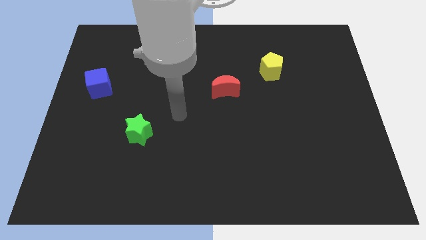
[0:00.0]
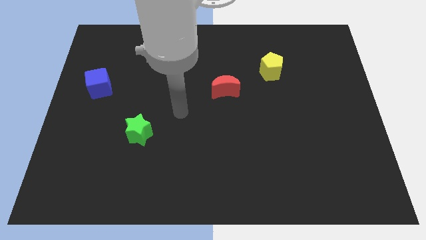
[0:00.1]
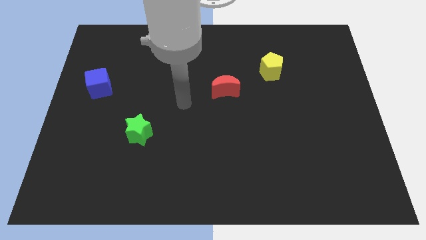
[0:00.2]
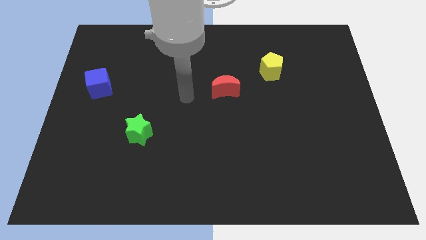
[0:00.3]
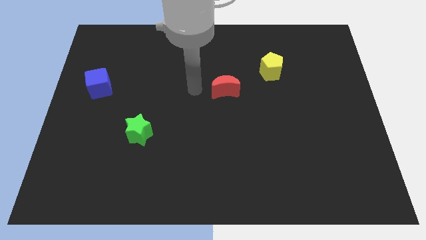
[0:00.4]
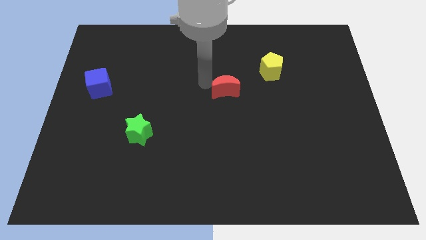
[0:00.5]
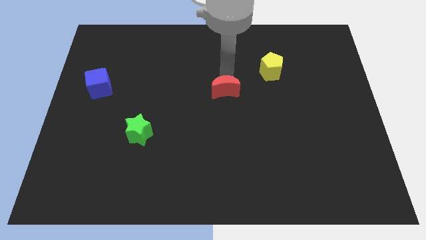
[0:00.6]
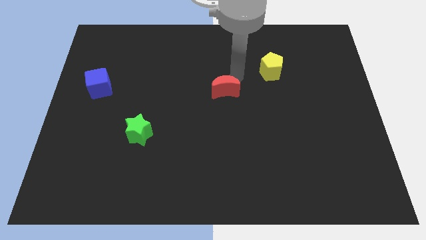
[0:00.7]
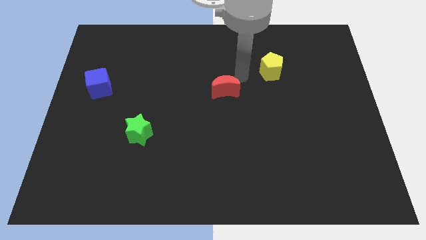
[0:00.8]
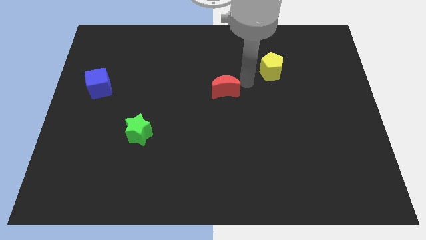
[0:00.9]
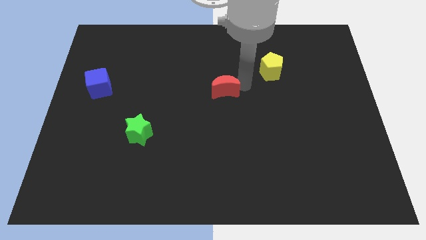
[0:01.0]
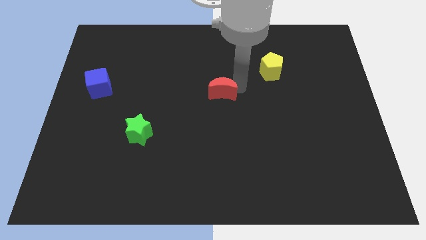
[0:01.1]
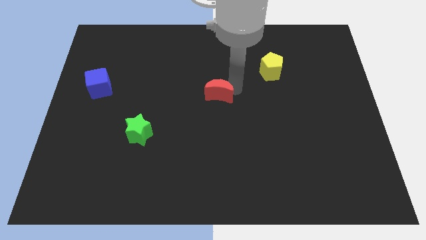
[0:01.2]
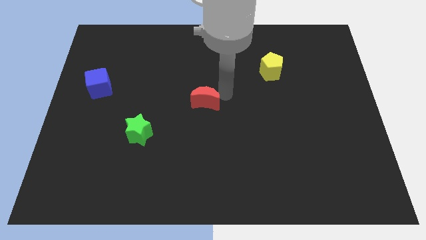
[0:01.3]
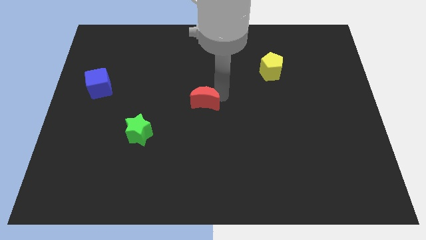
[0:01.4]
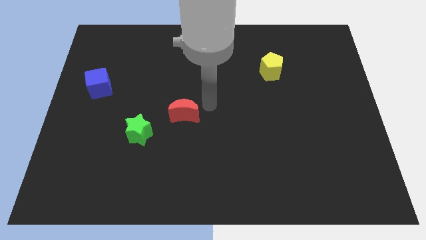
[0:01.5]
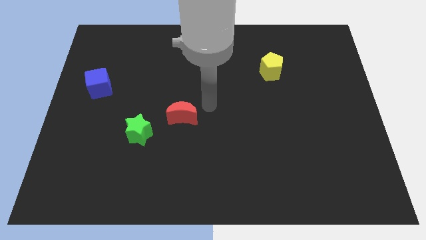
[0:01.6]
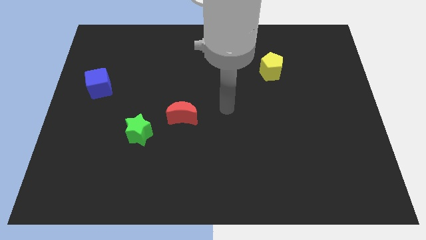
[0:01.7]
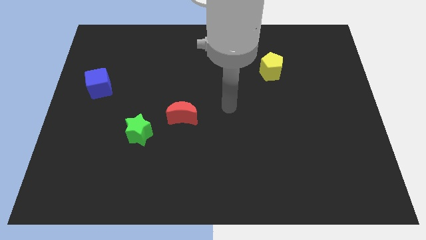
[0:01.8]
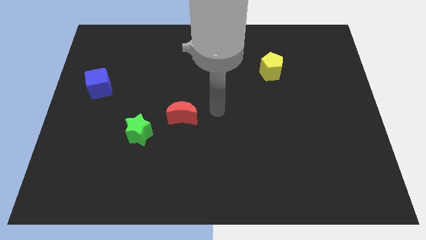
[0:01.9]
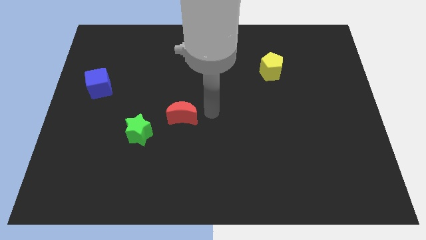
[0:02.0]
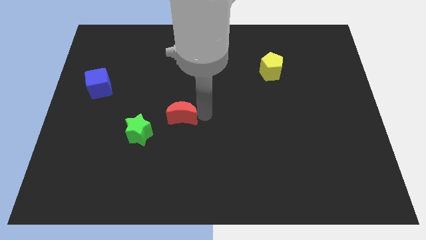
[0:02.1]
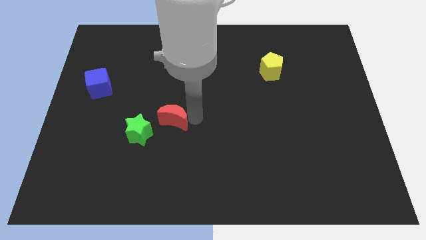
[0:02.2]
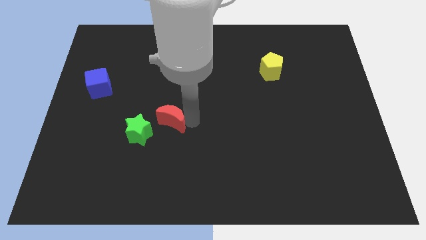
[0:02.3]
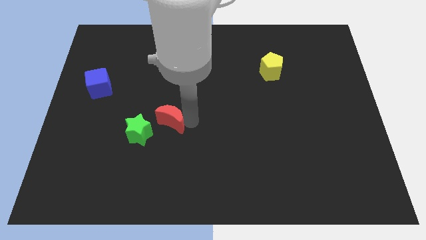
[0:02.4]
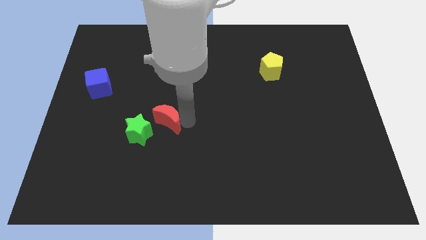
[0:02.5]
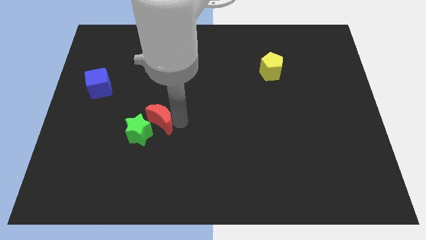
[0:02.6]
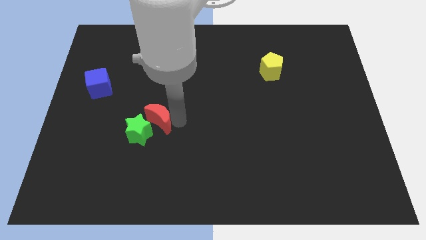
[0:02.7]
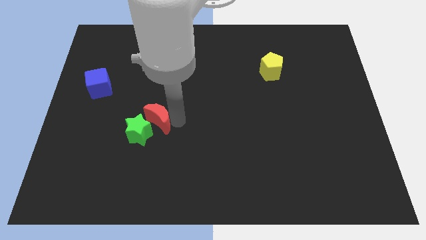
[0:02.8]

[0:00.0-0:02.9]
move the red moon to the star

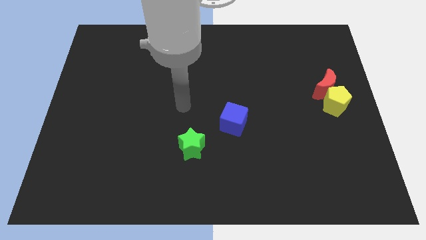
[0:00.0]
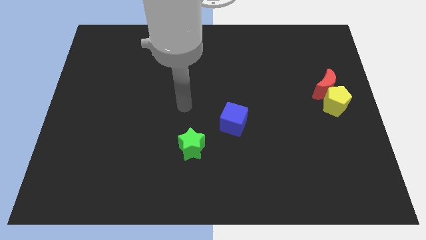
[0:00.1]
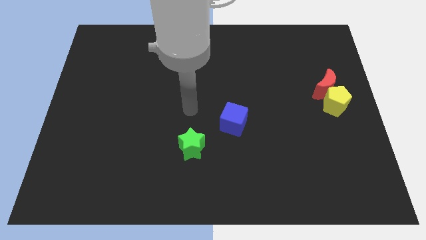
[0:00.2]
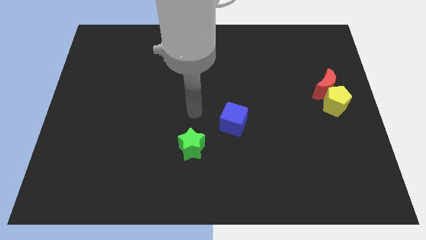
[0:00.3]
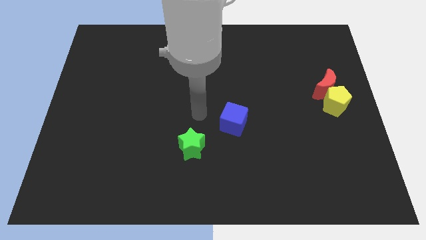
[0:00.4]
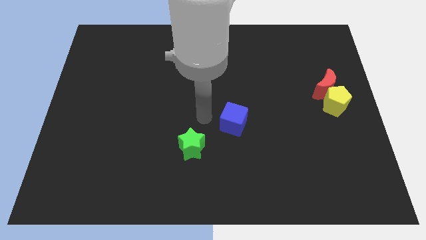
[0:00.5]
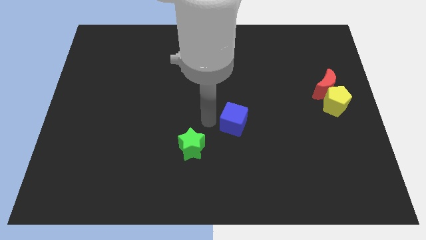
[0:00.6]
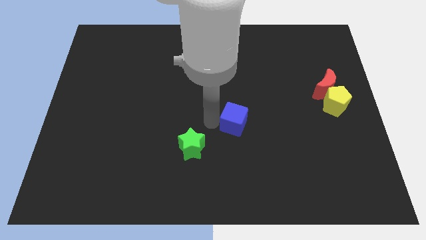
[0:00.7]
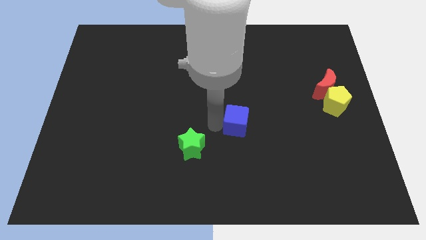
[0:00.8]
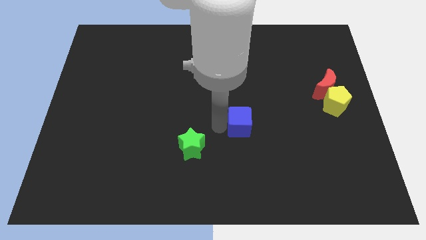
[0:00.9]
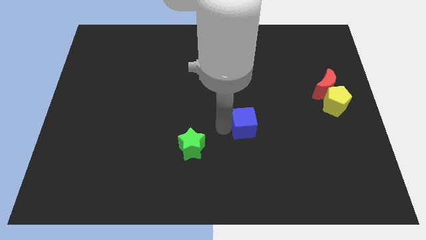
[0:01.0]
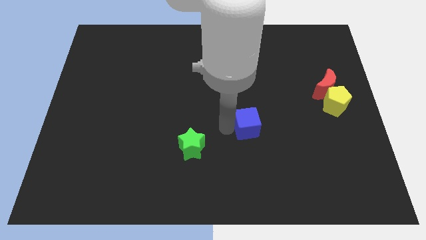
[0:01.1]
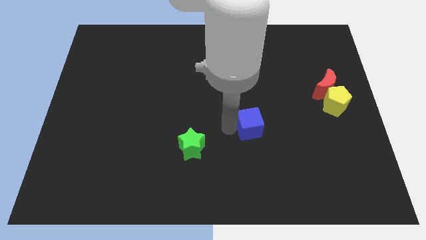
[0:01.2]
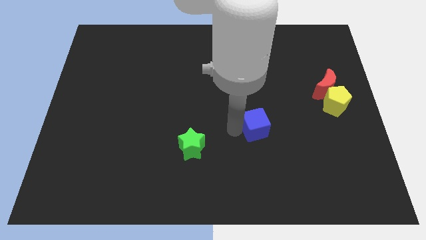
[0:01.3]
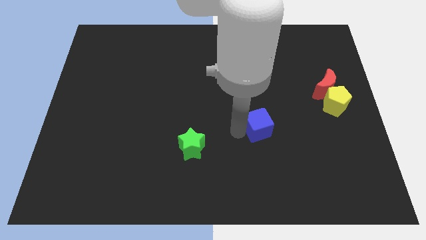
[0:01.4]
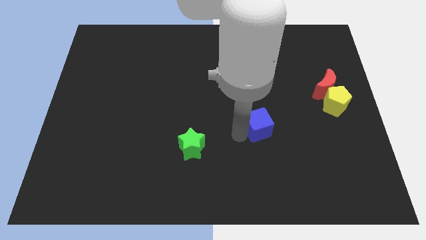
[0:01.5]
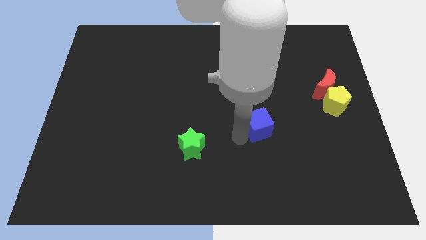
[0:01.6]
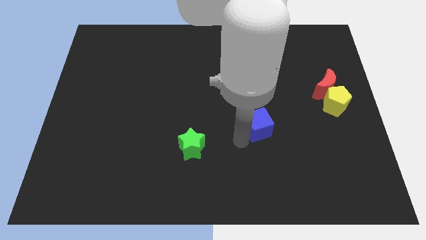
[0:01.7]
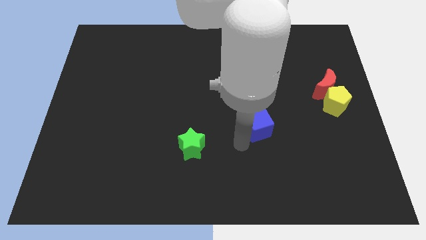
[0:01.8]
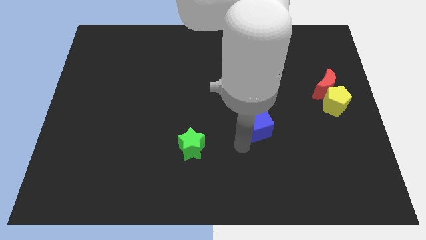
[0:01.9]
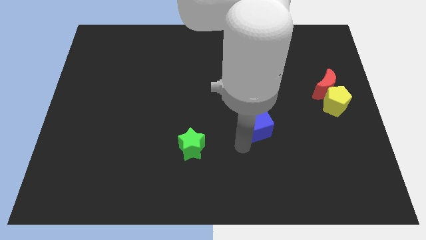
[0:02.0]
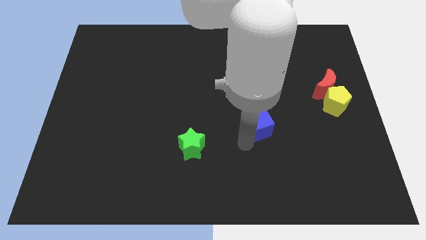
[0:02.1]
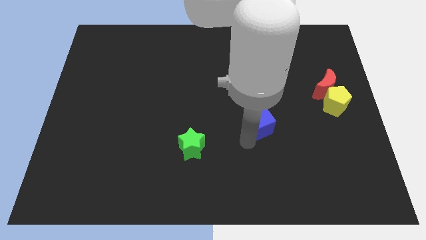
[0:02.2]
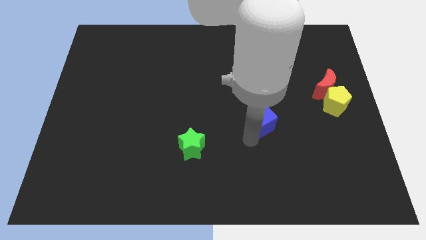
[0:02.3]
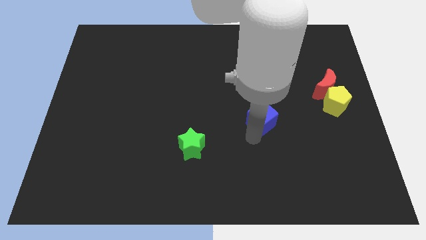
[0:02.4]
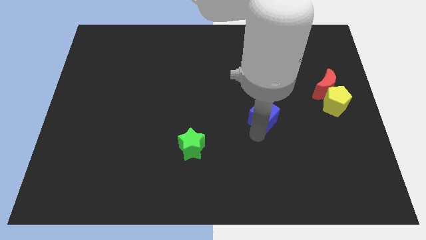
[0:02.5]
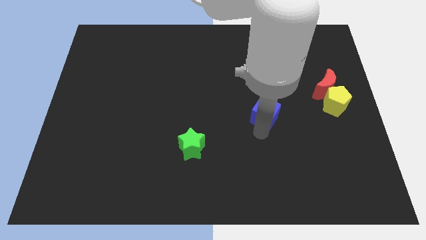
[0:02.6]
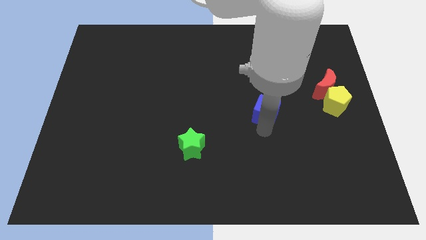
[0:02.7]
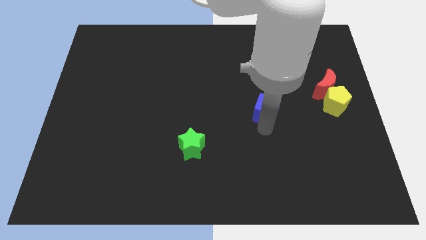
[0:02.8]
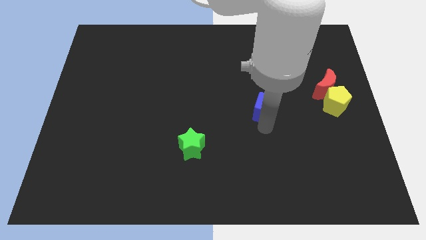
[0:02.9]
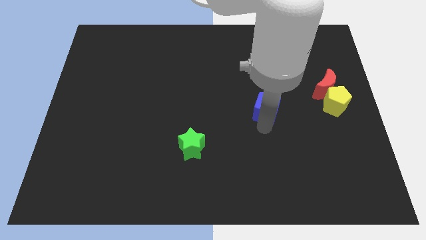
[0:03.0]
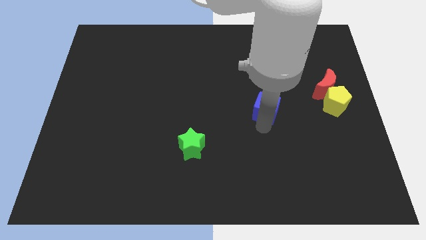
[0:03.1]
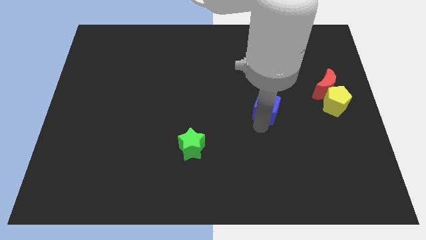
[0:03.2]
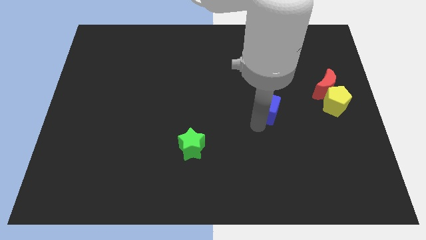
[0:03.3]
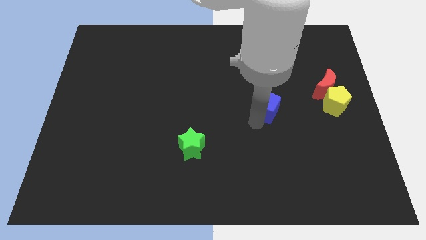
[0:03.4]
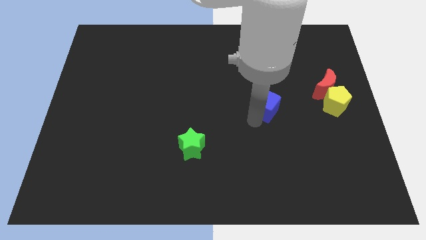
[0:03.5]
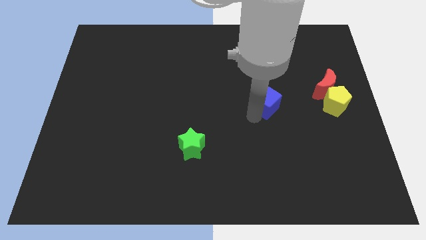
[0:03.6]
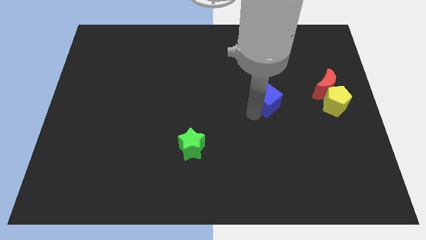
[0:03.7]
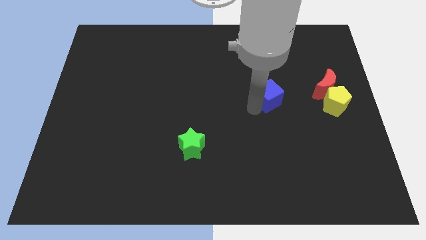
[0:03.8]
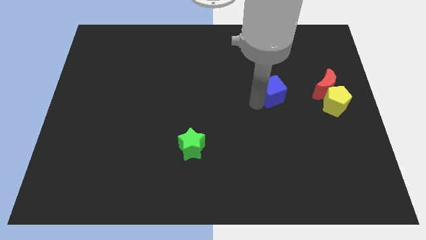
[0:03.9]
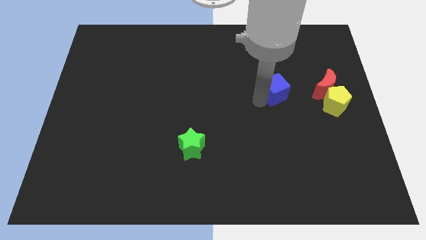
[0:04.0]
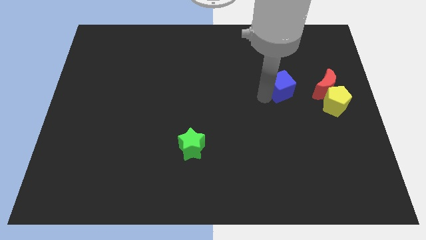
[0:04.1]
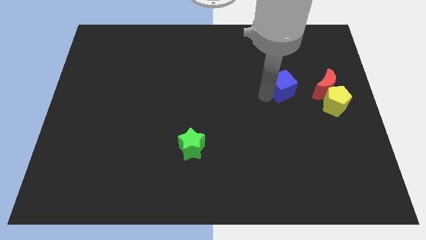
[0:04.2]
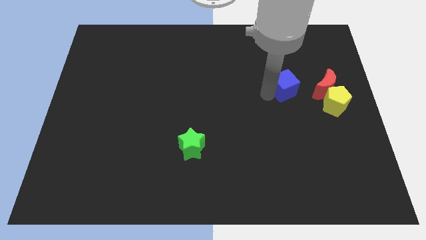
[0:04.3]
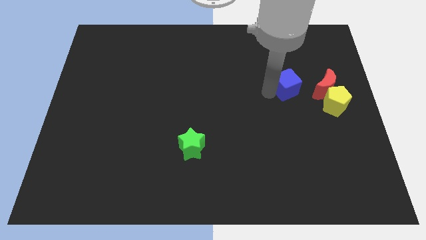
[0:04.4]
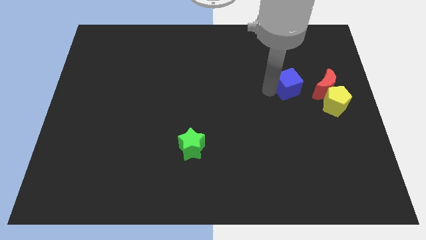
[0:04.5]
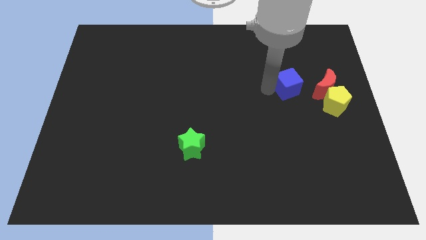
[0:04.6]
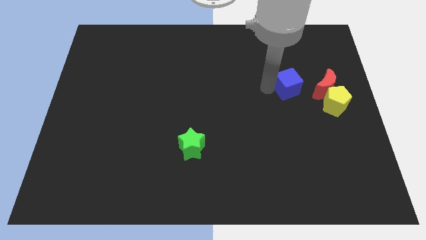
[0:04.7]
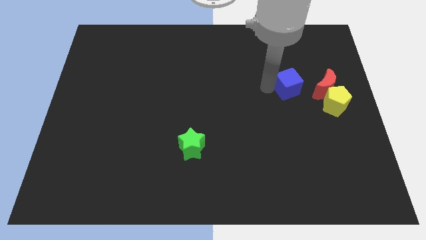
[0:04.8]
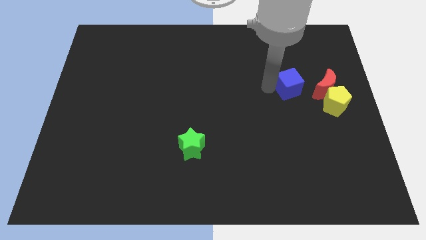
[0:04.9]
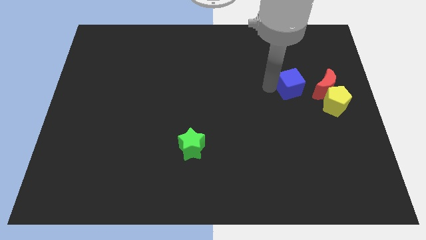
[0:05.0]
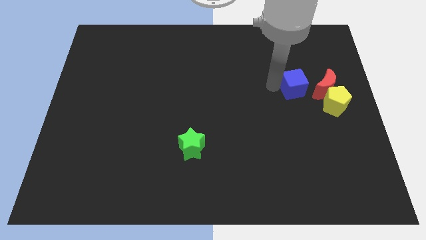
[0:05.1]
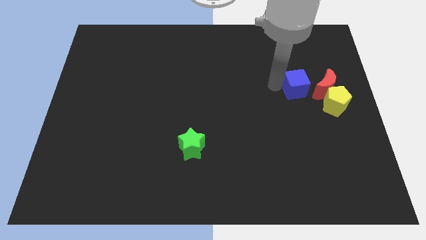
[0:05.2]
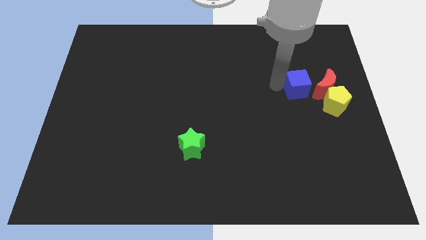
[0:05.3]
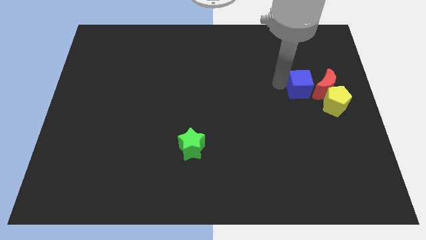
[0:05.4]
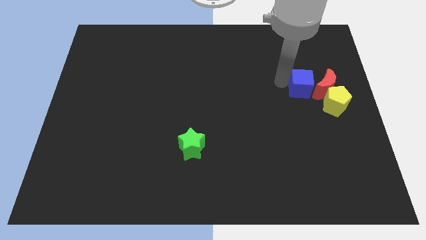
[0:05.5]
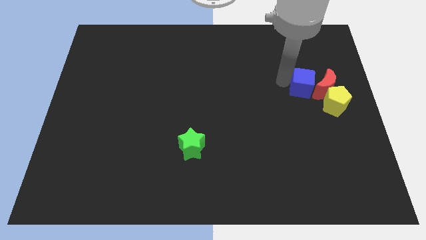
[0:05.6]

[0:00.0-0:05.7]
move the blue block close to the red moon
